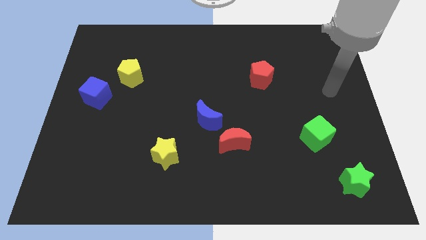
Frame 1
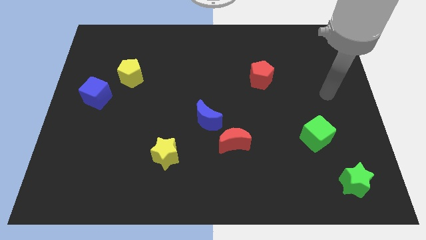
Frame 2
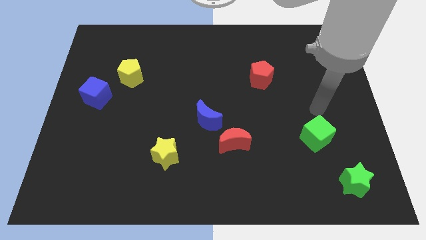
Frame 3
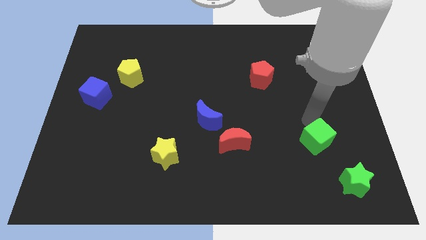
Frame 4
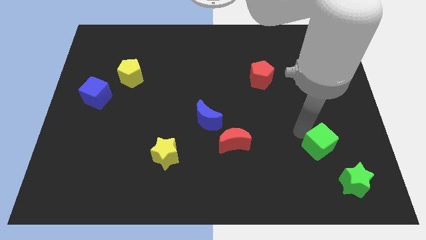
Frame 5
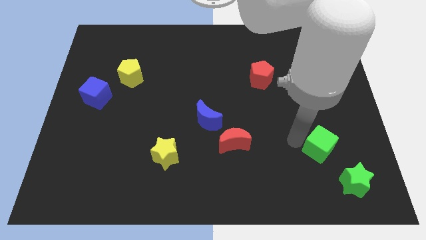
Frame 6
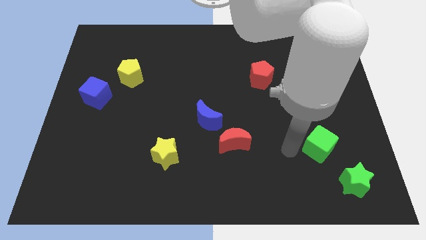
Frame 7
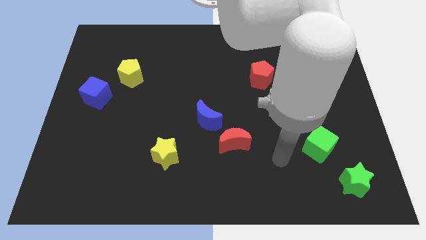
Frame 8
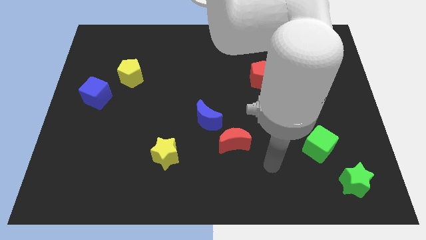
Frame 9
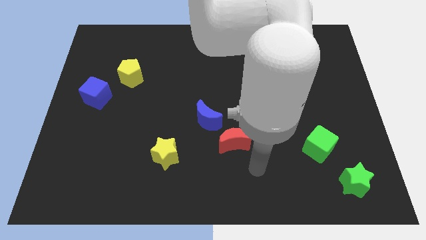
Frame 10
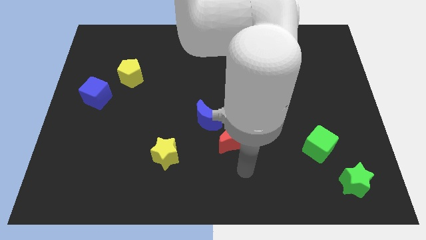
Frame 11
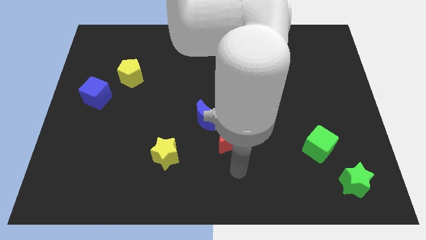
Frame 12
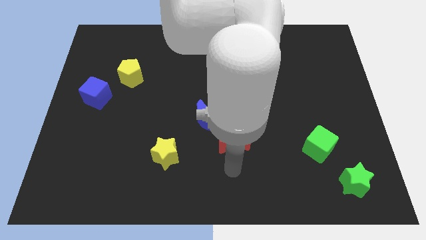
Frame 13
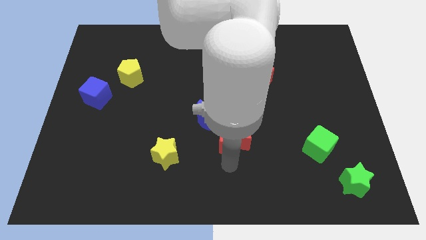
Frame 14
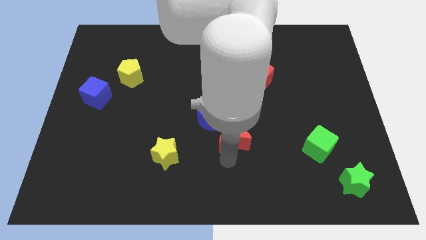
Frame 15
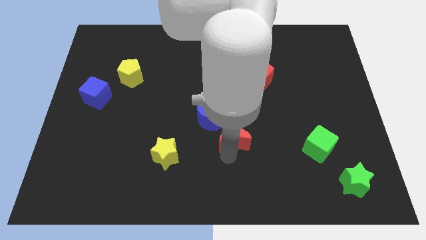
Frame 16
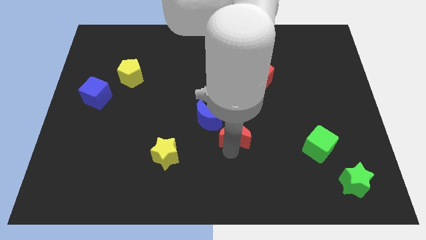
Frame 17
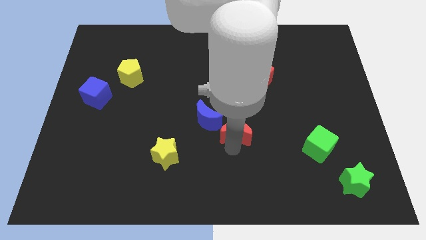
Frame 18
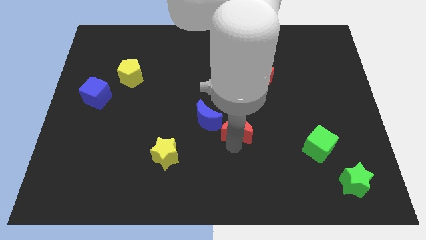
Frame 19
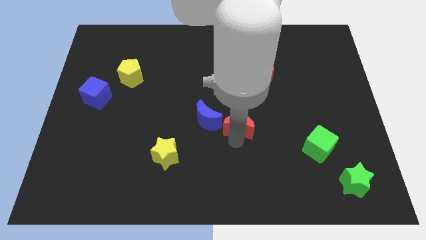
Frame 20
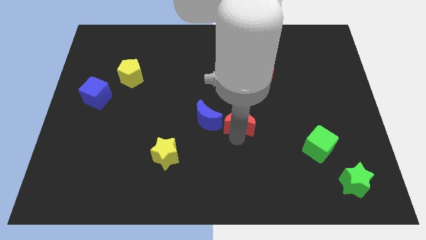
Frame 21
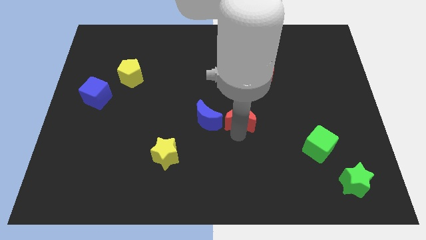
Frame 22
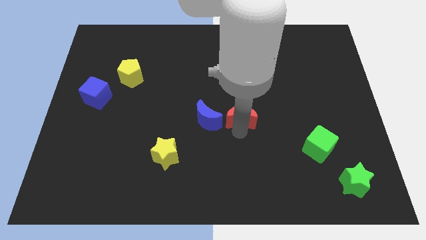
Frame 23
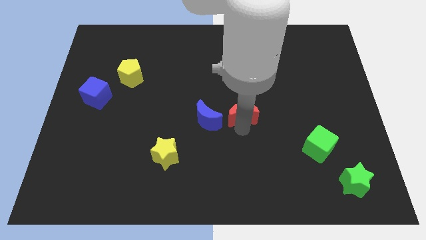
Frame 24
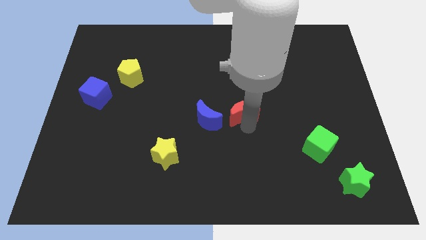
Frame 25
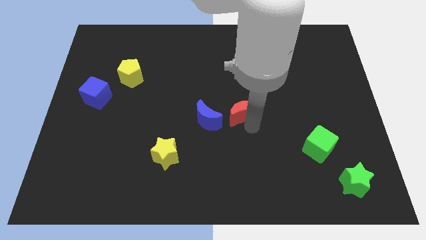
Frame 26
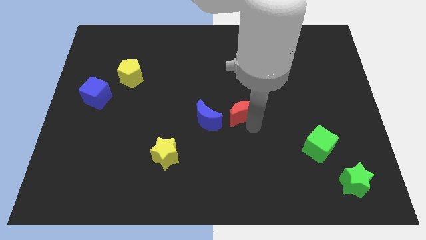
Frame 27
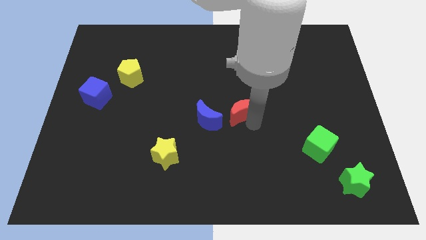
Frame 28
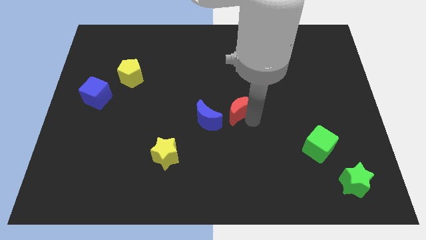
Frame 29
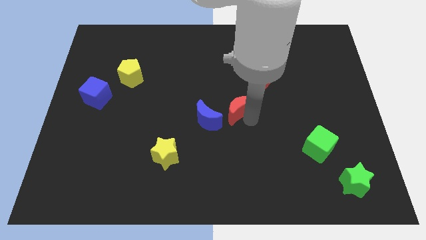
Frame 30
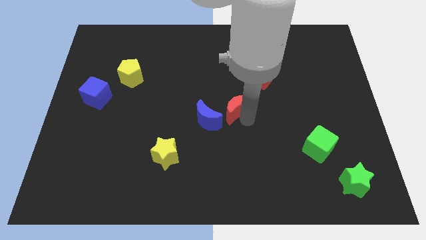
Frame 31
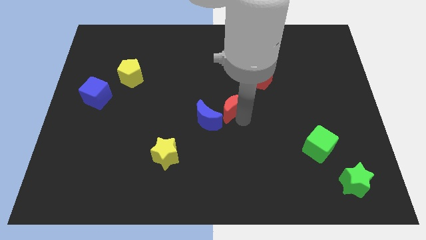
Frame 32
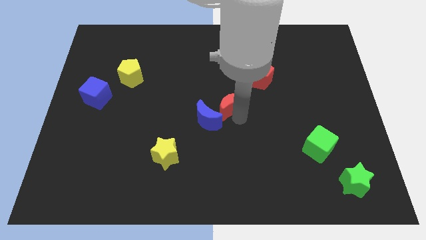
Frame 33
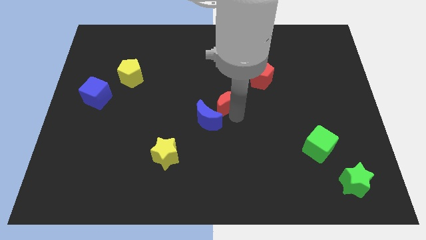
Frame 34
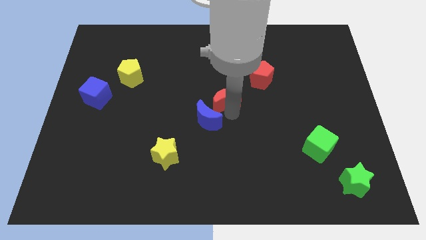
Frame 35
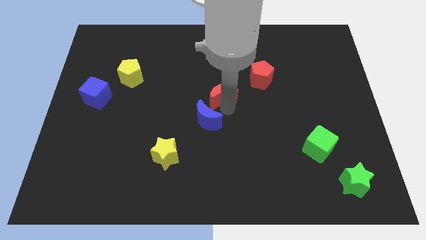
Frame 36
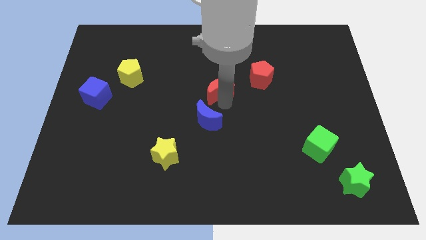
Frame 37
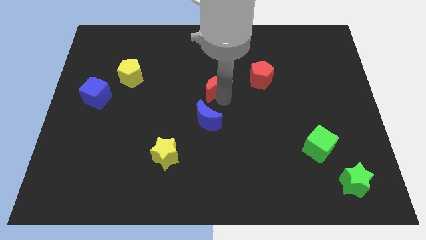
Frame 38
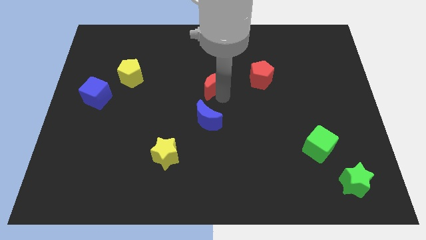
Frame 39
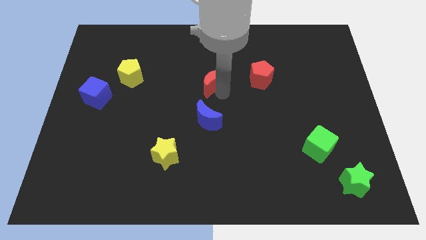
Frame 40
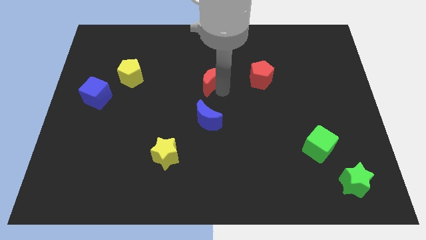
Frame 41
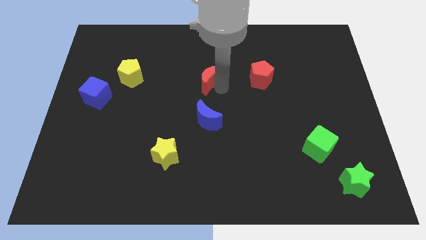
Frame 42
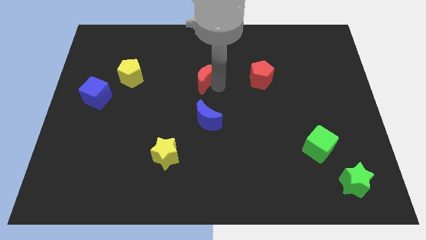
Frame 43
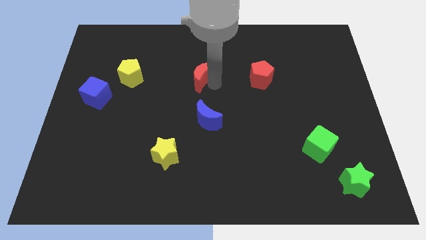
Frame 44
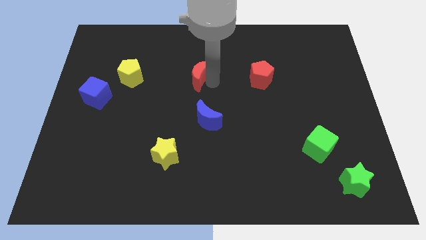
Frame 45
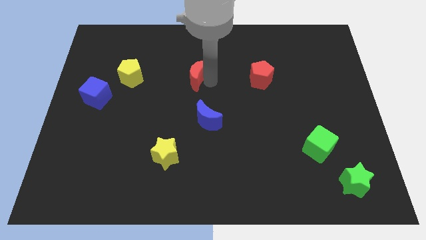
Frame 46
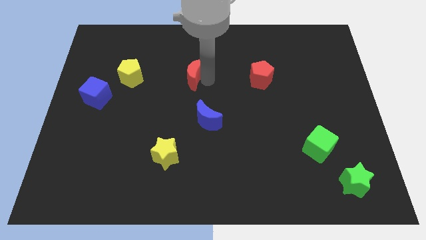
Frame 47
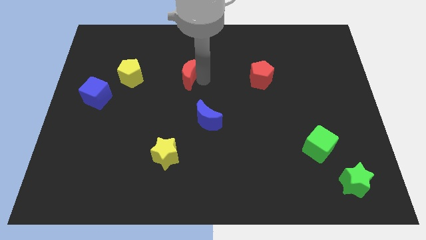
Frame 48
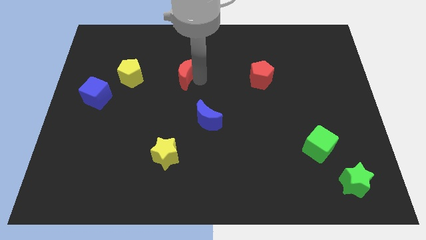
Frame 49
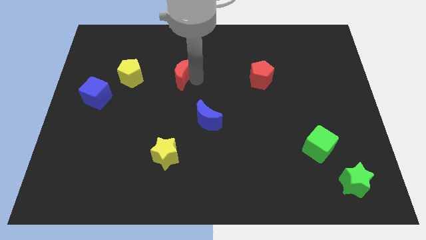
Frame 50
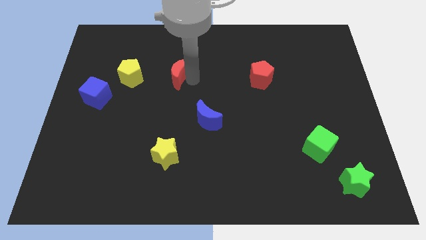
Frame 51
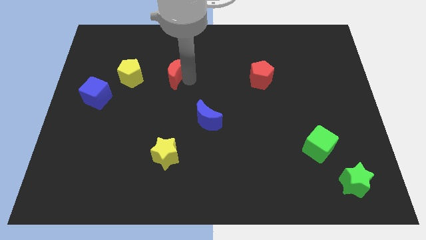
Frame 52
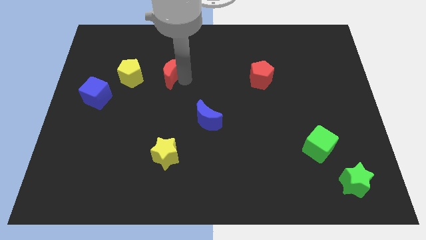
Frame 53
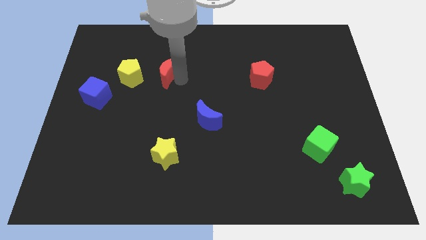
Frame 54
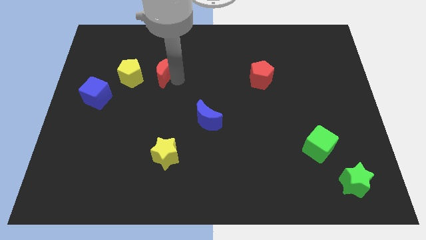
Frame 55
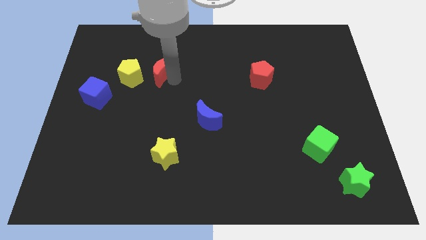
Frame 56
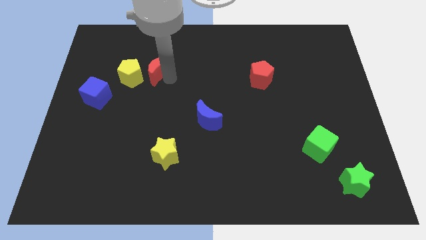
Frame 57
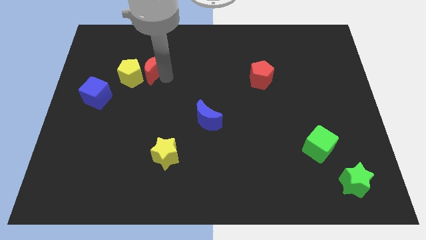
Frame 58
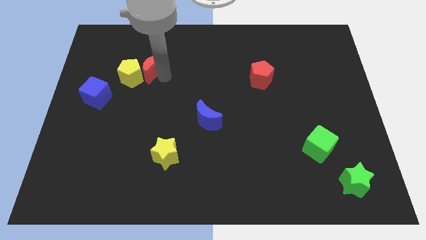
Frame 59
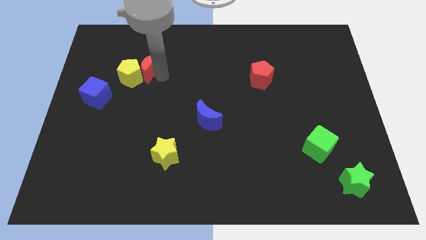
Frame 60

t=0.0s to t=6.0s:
put the red moon towards the yellow pentagon

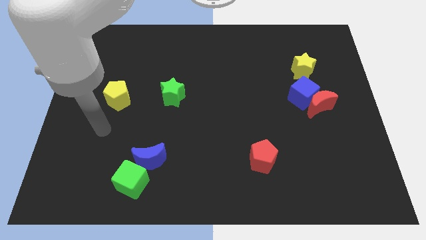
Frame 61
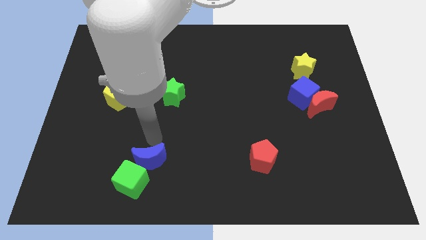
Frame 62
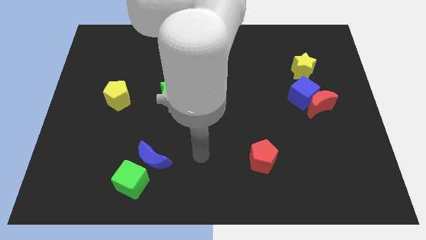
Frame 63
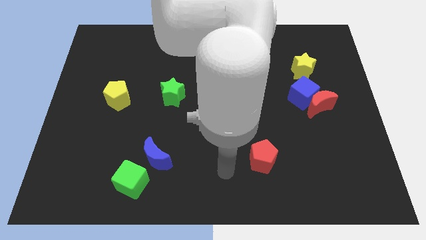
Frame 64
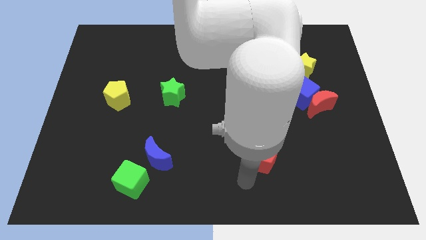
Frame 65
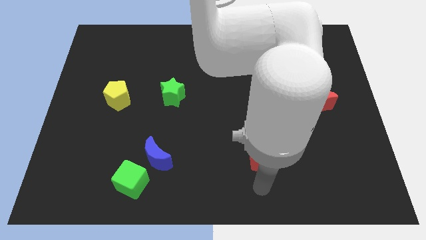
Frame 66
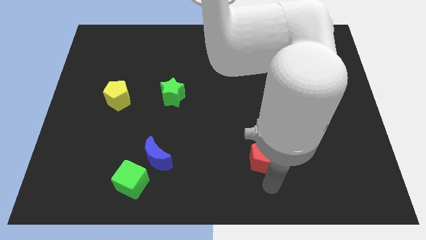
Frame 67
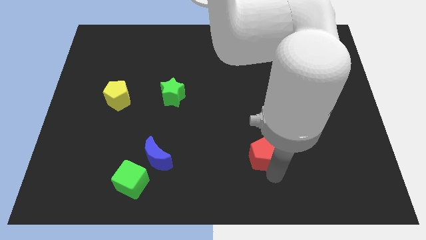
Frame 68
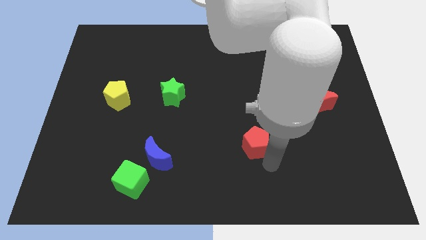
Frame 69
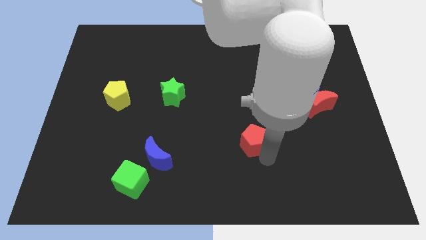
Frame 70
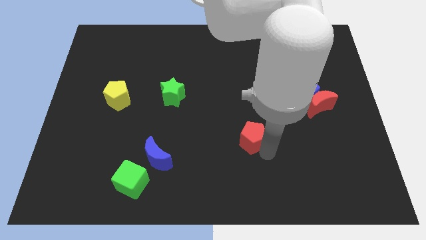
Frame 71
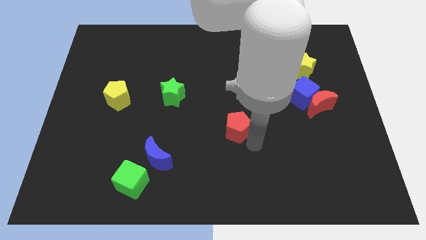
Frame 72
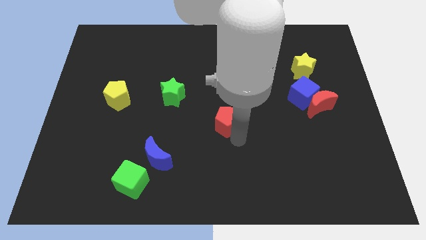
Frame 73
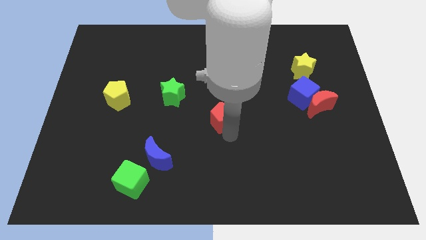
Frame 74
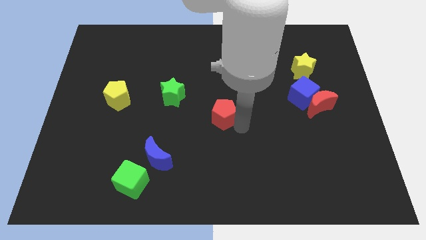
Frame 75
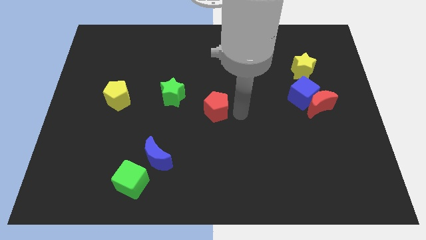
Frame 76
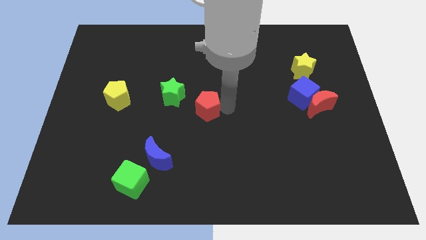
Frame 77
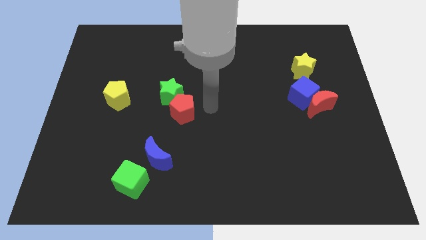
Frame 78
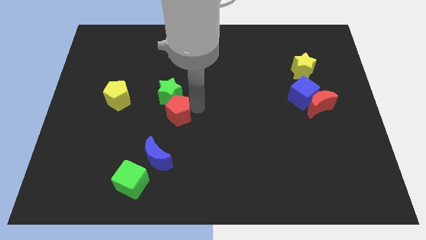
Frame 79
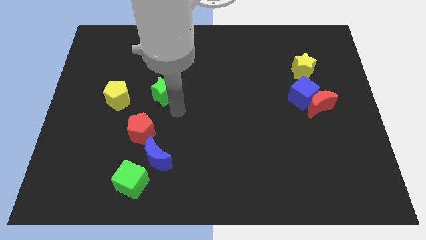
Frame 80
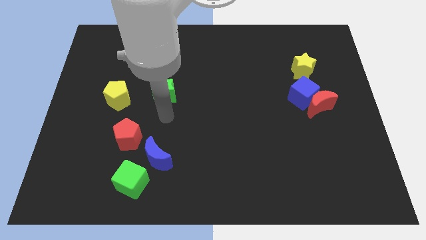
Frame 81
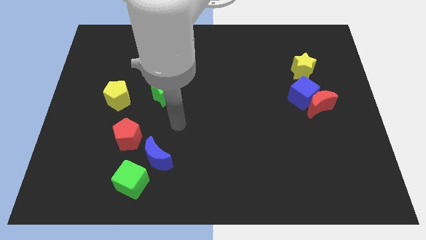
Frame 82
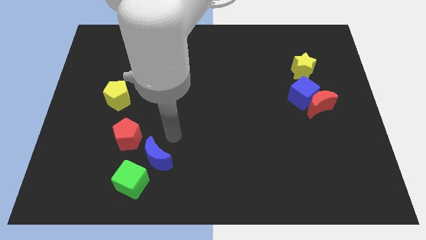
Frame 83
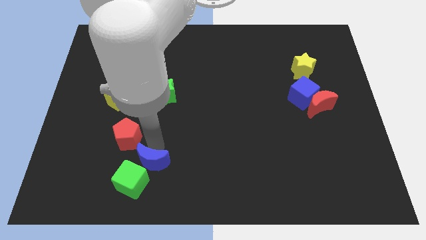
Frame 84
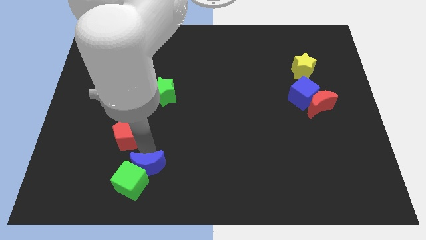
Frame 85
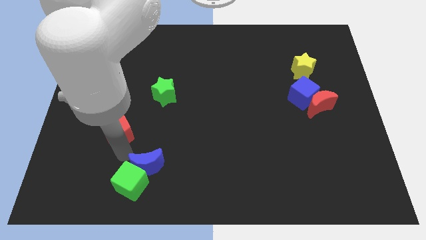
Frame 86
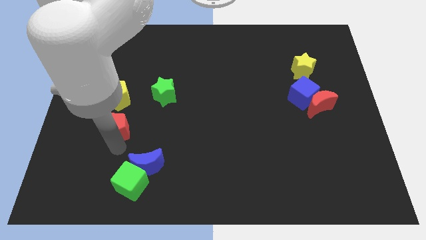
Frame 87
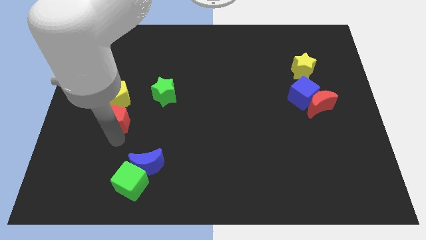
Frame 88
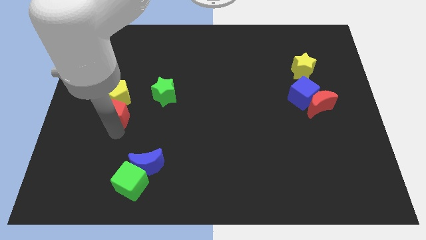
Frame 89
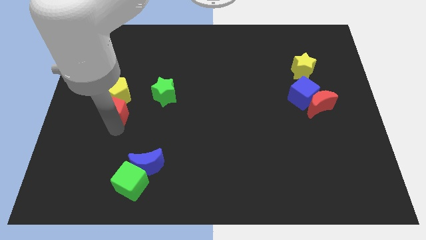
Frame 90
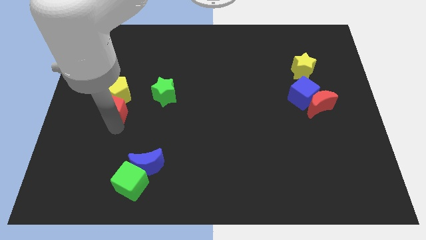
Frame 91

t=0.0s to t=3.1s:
move the red pentagon close to the yellow pentagon
